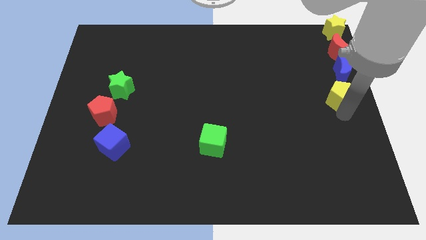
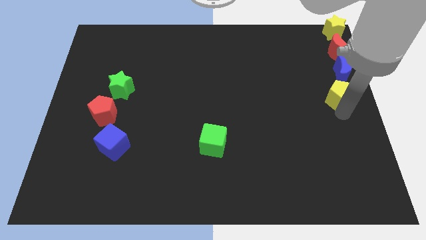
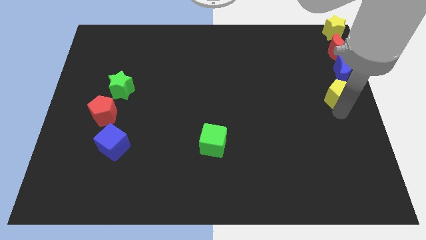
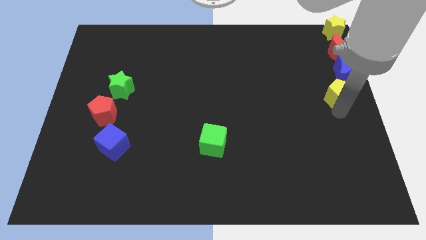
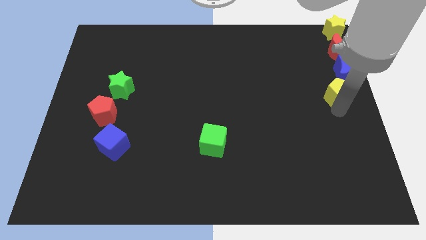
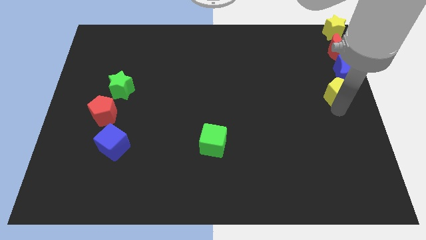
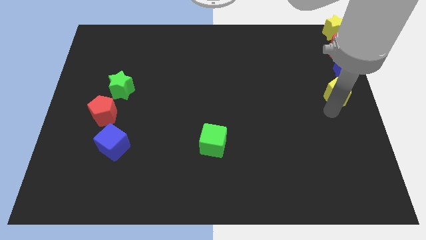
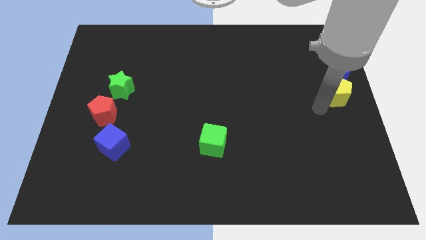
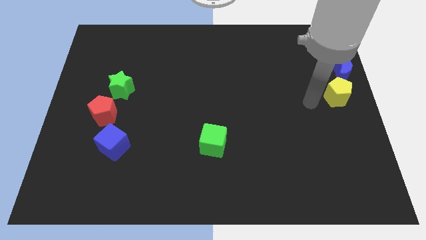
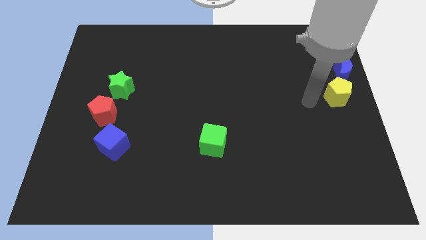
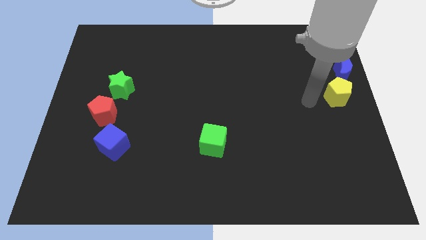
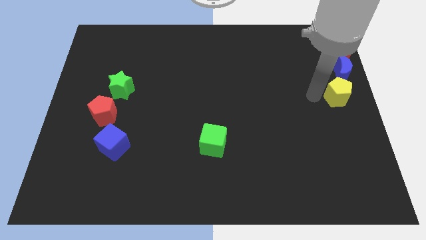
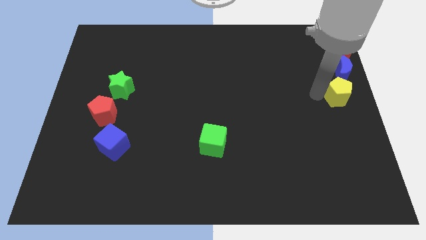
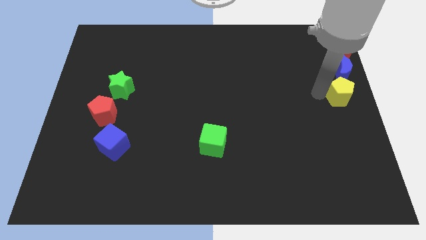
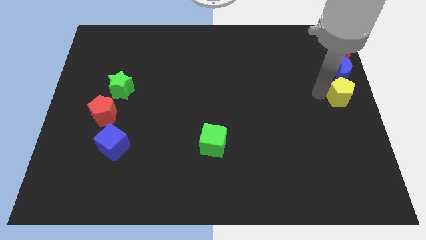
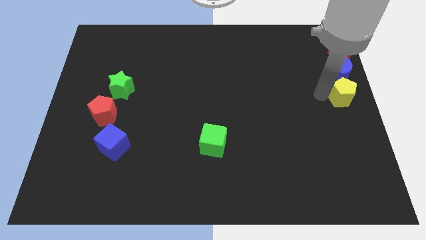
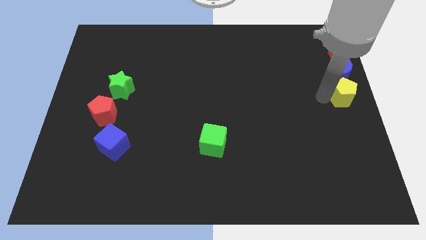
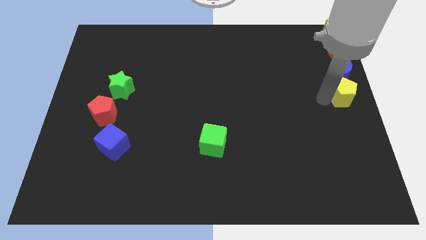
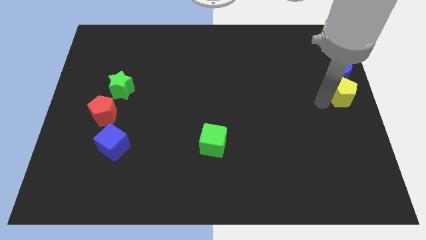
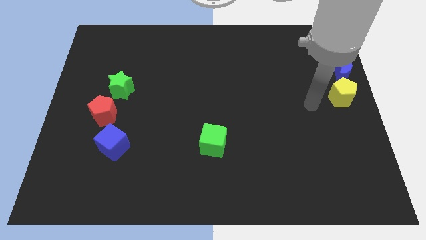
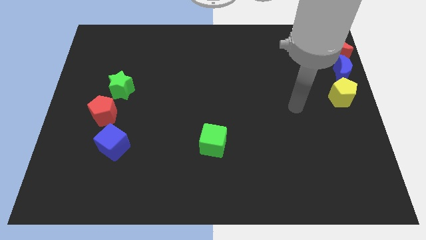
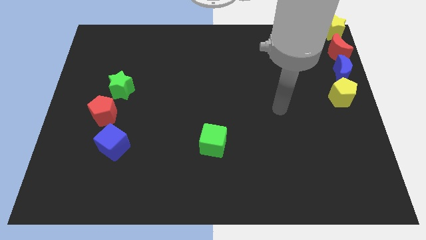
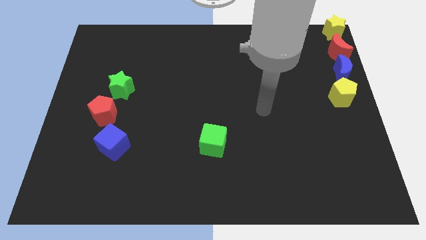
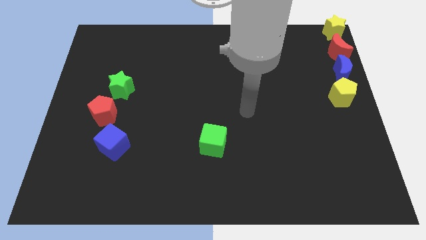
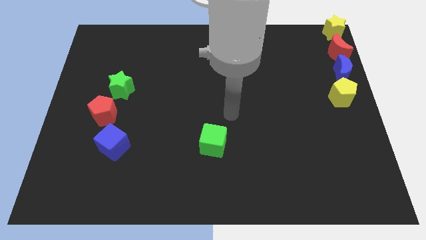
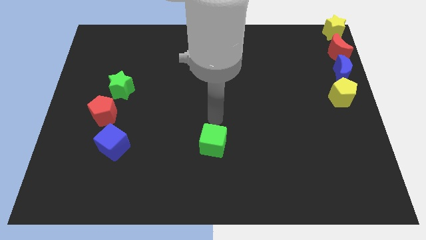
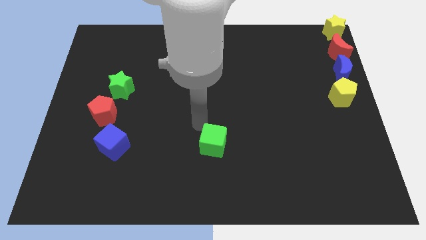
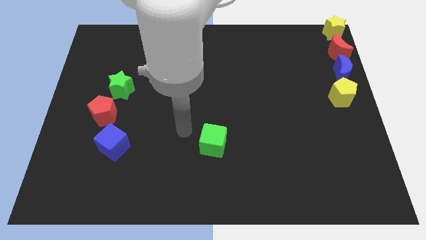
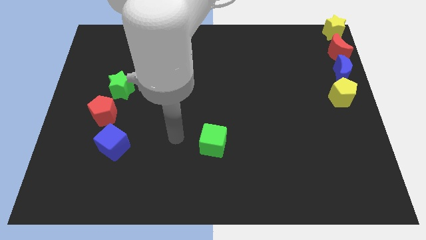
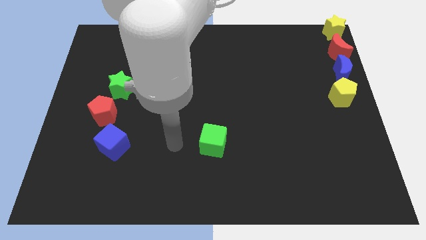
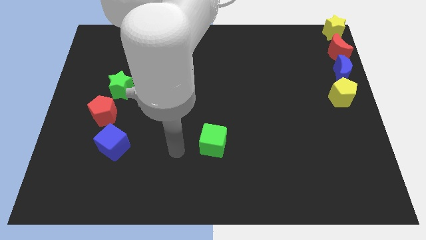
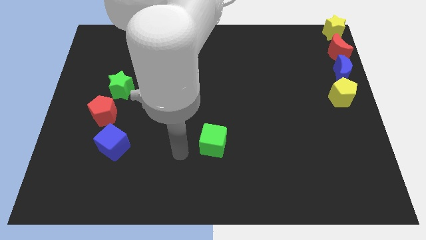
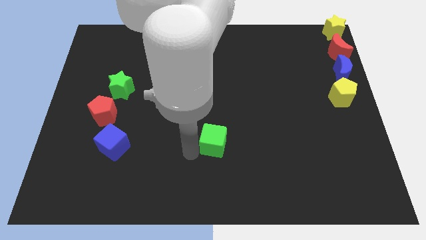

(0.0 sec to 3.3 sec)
place the arm to the left of the green cube

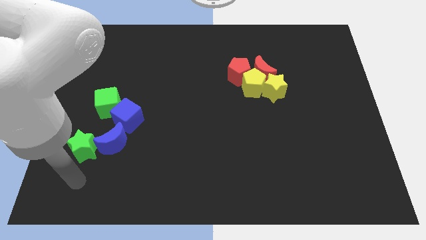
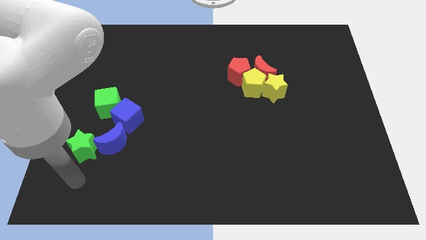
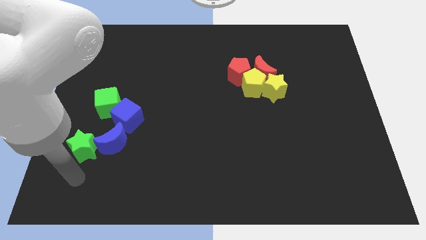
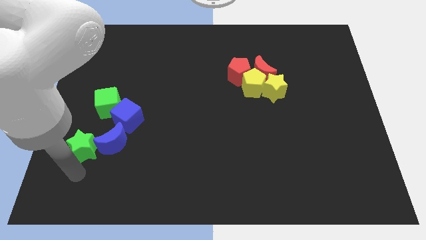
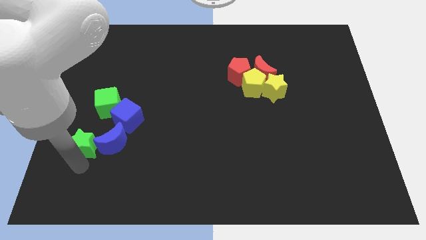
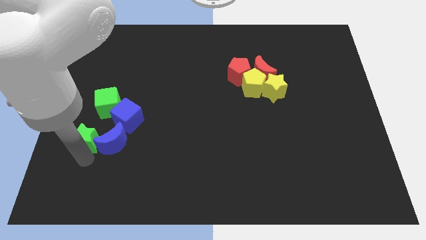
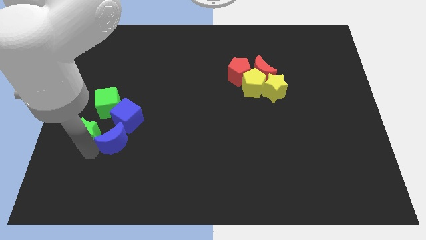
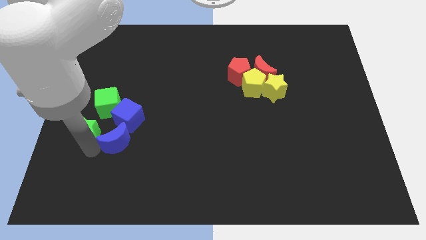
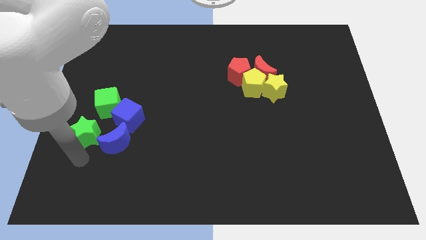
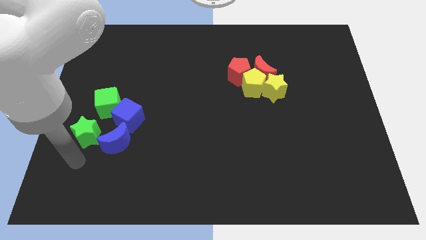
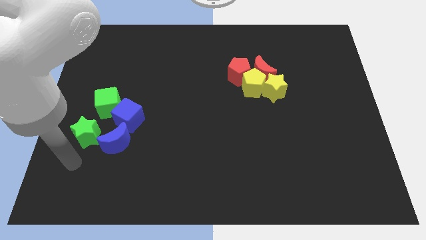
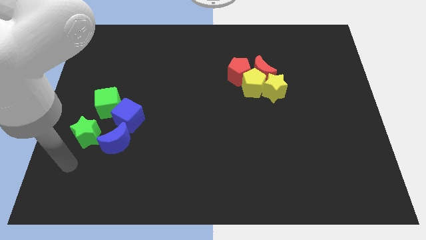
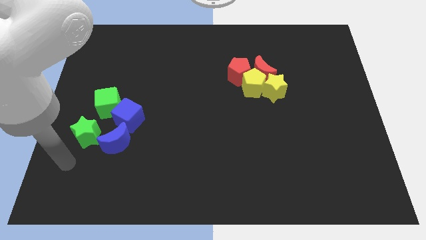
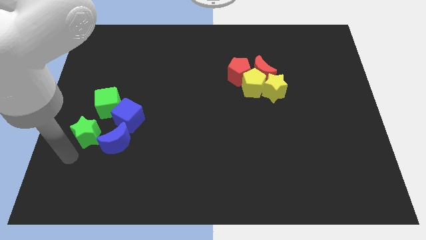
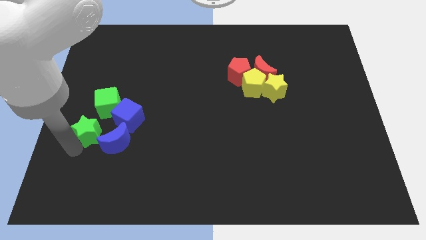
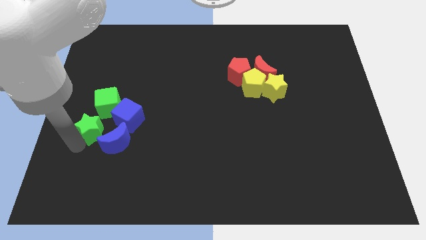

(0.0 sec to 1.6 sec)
push green star upwards

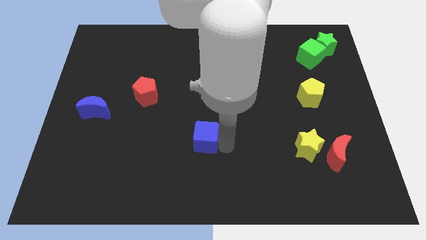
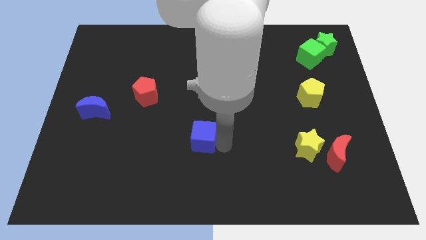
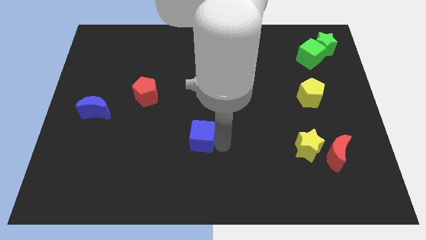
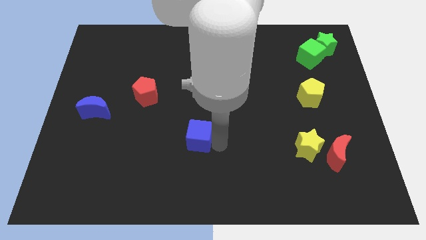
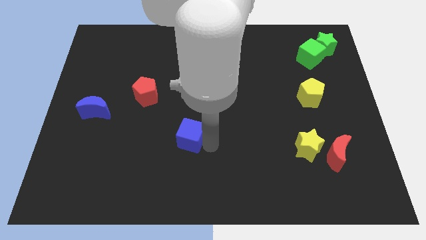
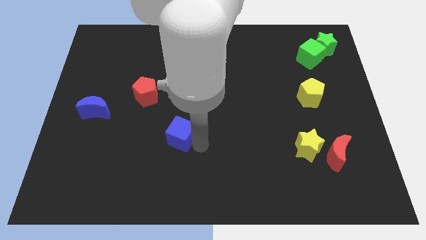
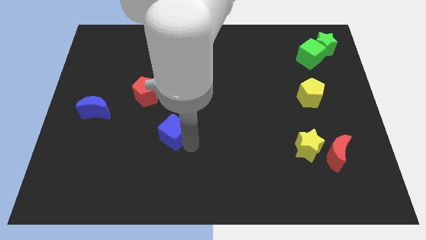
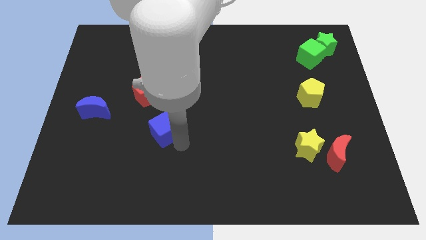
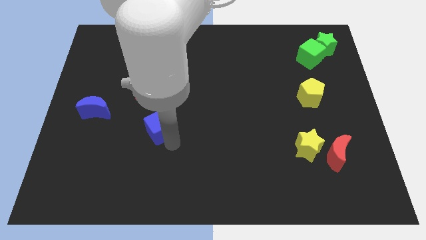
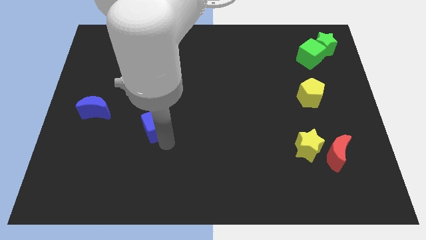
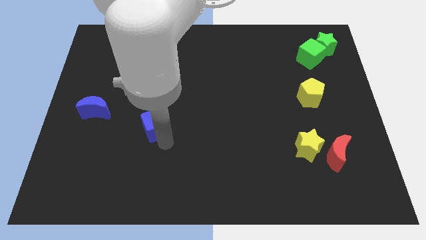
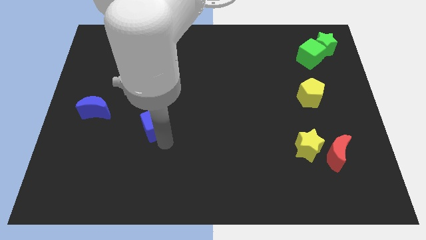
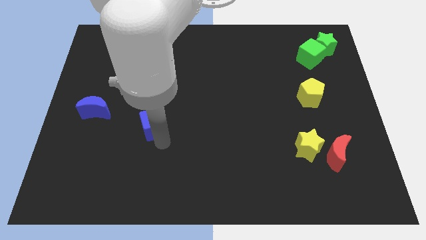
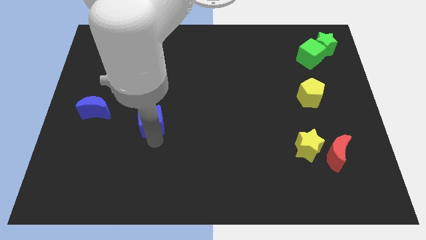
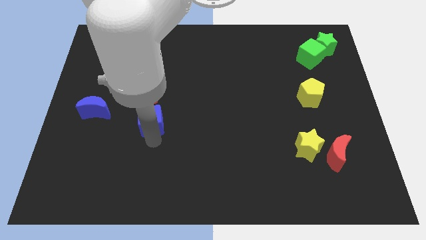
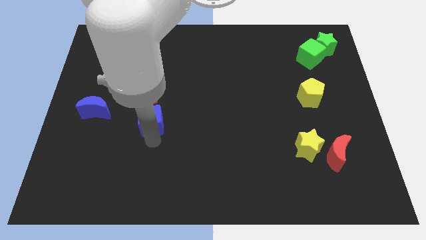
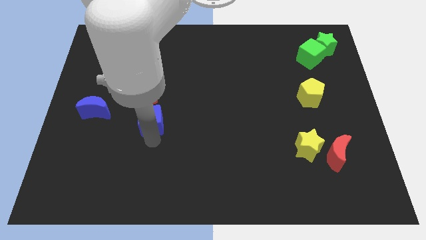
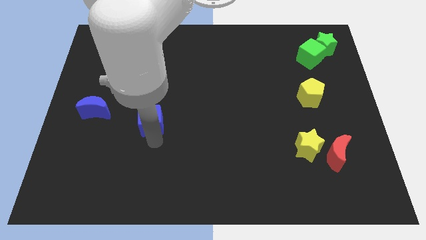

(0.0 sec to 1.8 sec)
move the blue cube near to the red pentagon

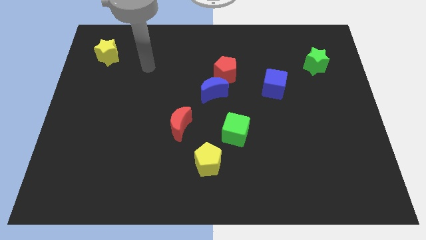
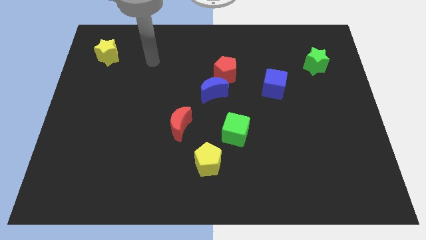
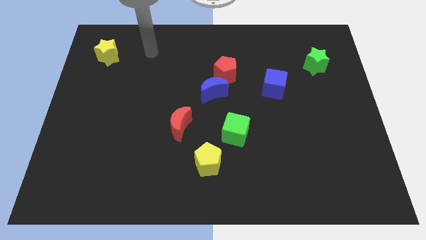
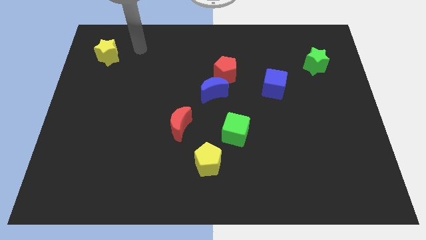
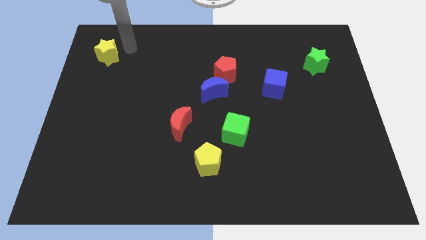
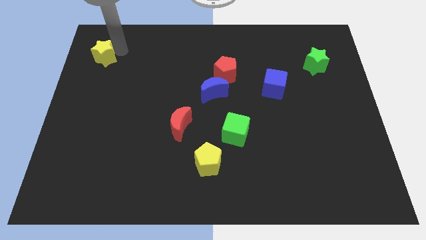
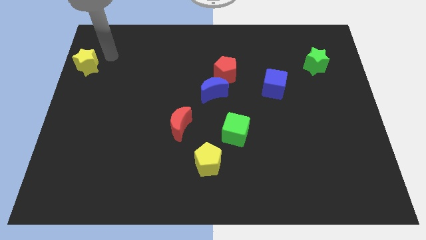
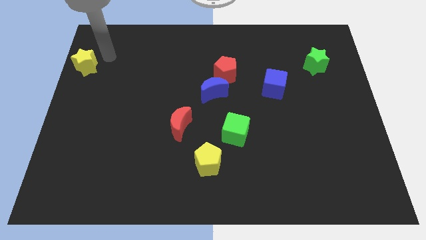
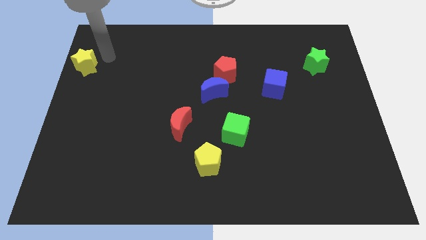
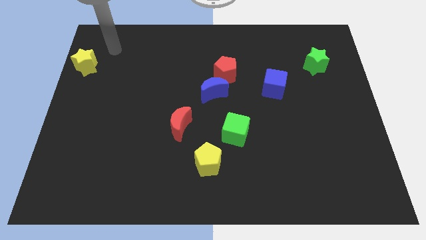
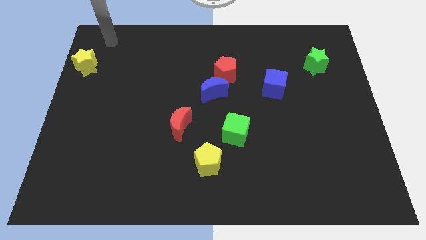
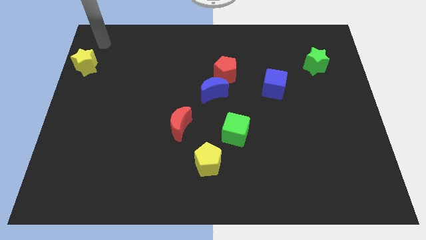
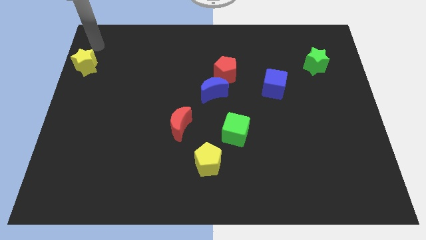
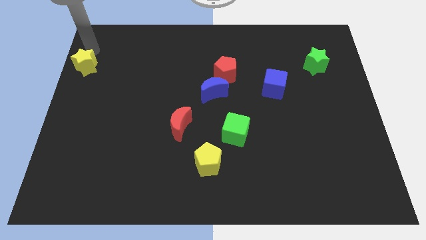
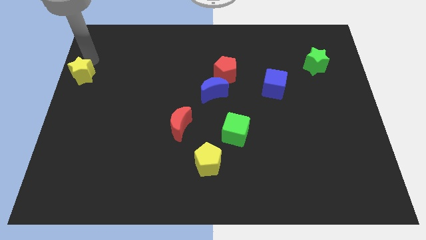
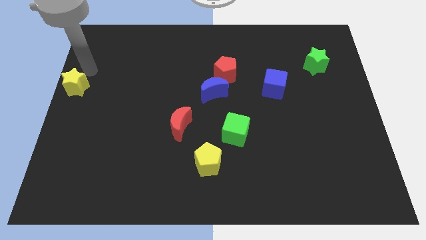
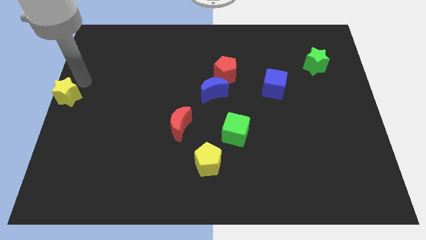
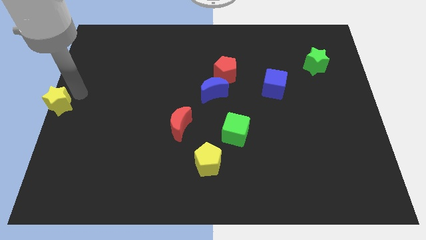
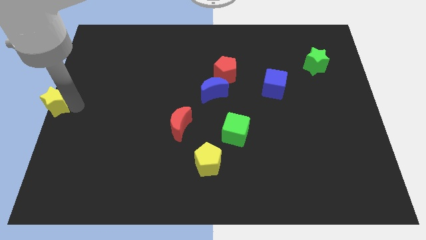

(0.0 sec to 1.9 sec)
place the yellow star at the center left end of the board

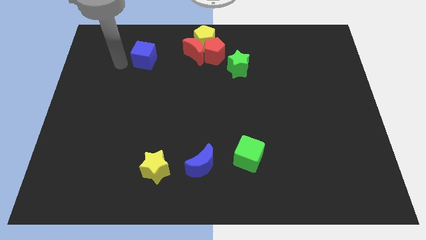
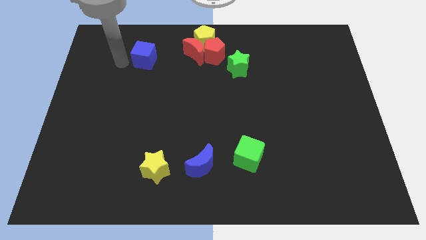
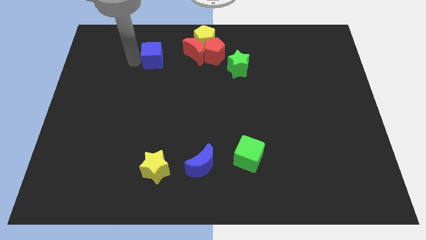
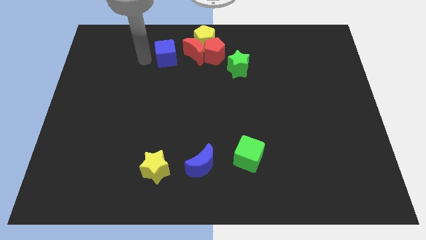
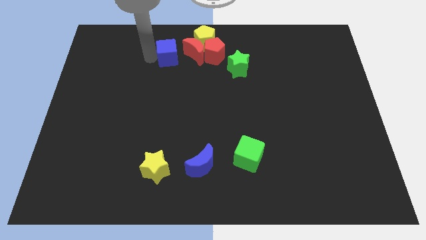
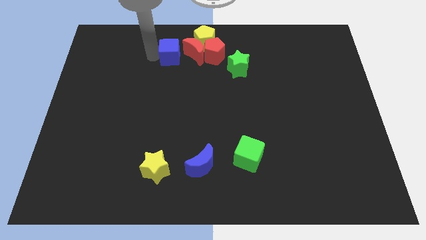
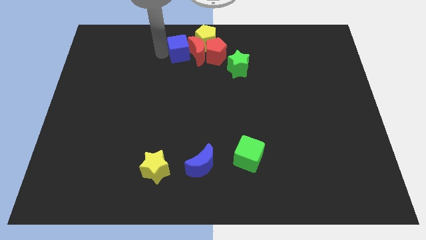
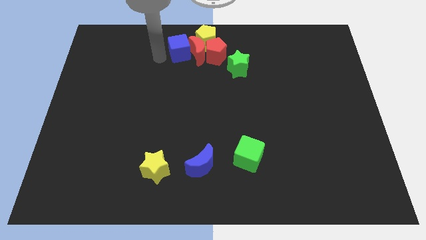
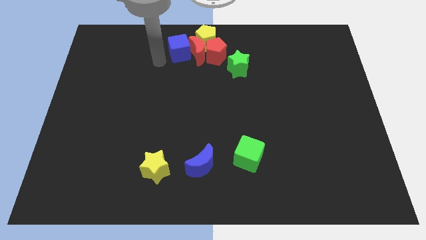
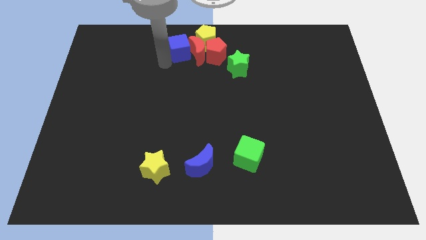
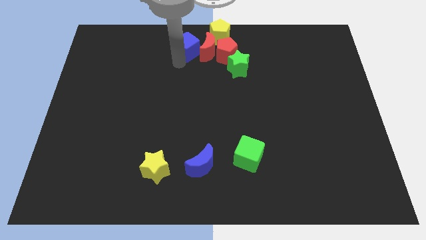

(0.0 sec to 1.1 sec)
push the blue cube into the red crescent
